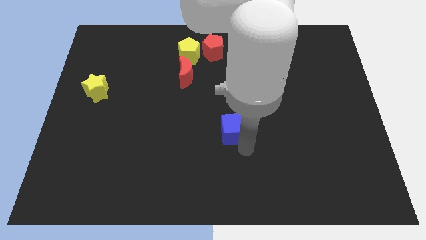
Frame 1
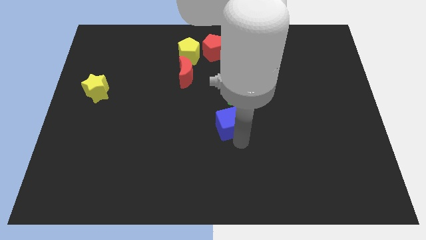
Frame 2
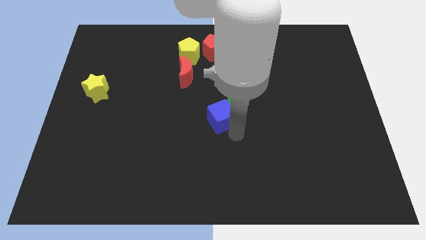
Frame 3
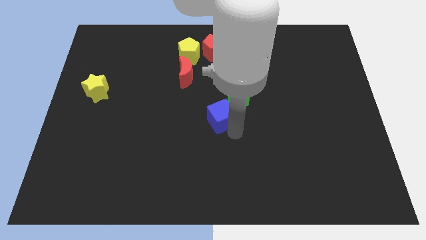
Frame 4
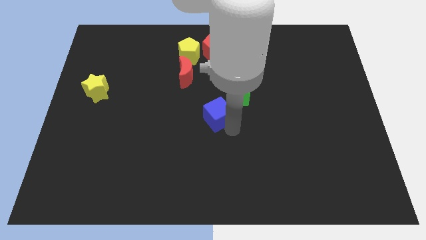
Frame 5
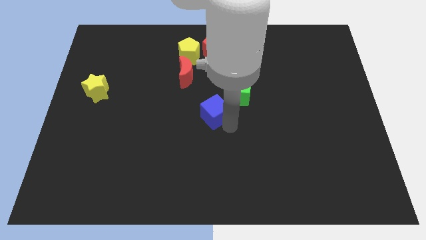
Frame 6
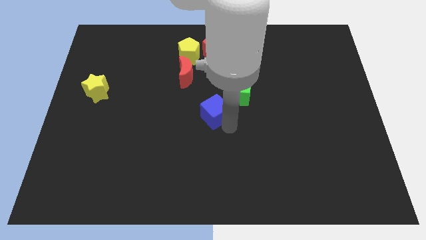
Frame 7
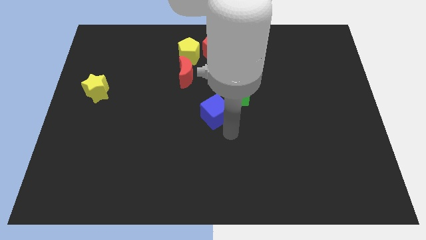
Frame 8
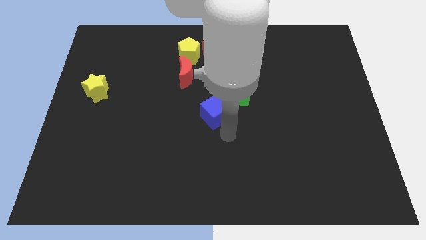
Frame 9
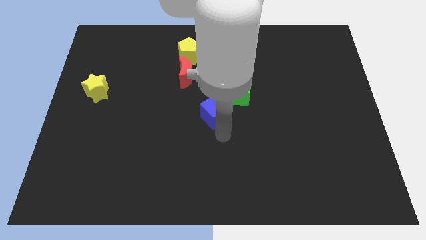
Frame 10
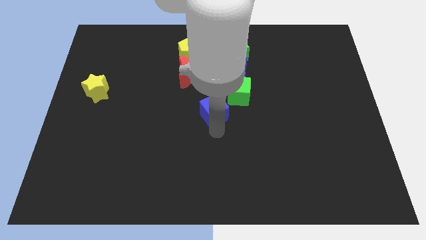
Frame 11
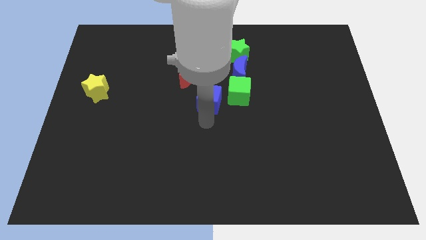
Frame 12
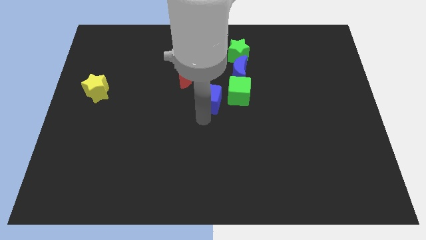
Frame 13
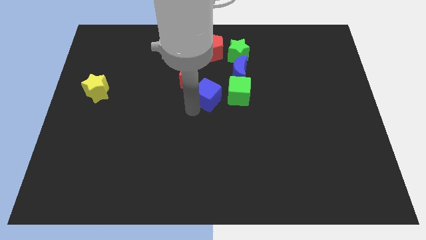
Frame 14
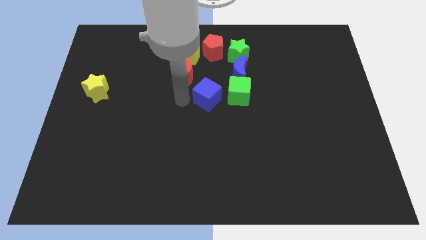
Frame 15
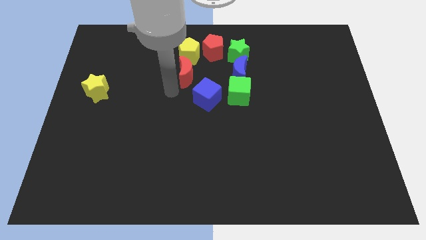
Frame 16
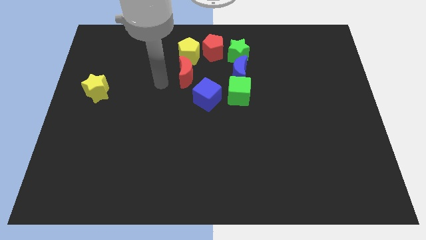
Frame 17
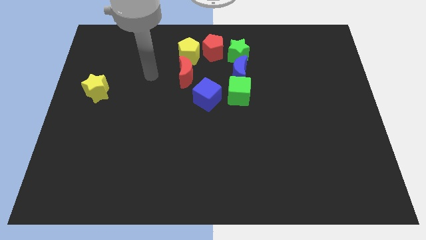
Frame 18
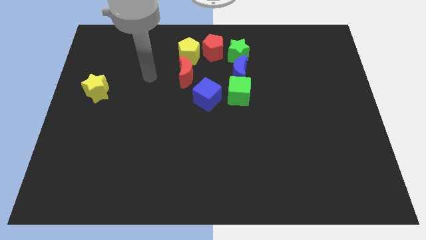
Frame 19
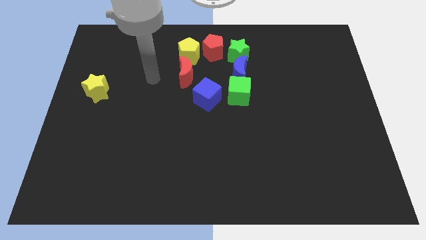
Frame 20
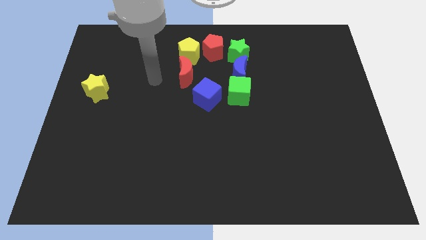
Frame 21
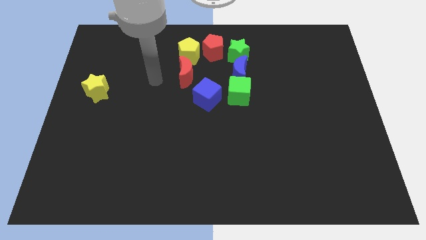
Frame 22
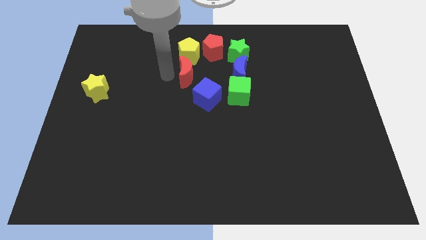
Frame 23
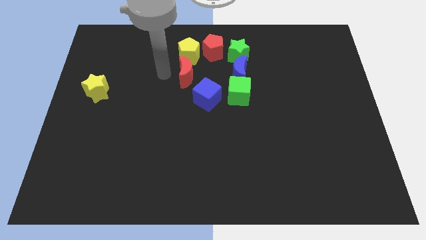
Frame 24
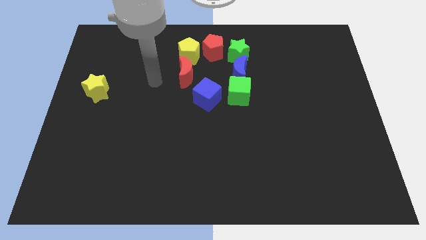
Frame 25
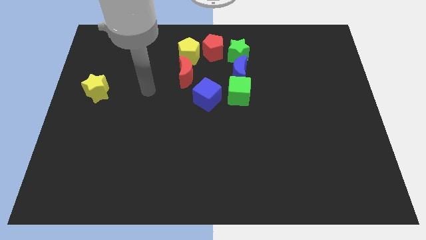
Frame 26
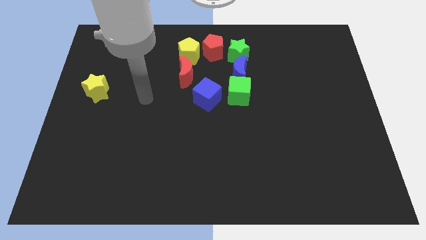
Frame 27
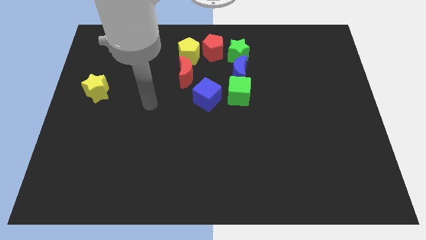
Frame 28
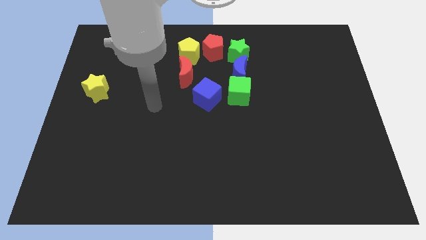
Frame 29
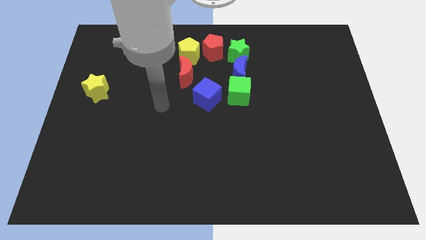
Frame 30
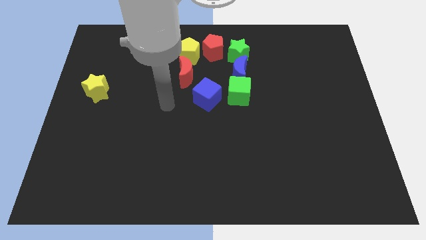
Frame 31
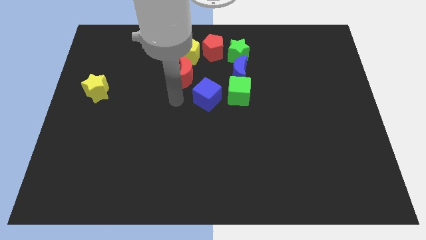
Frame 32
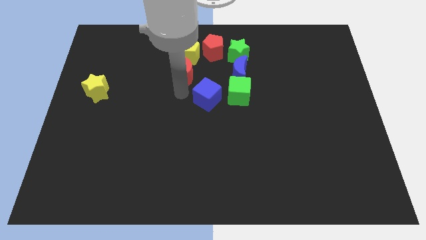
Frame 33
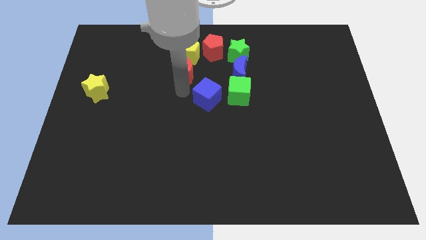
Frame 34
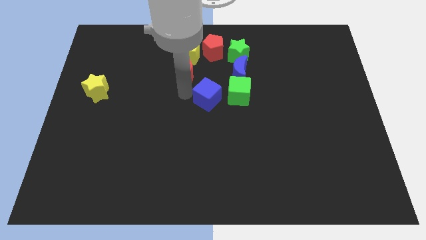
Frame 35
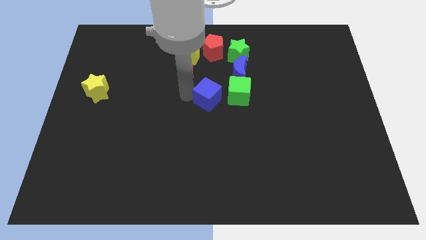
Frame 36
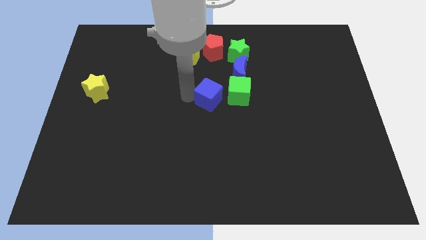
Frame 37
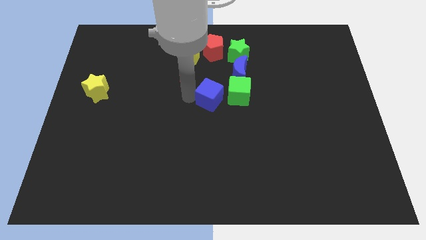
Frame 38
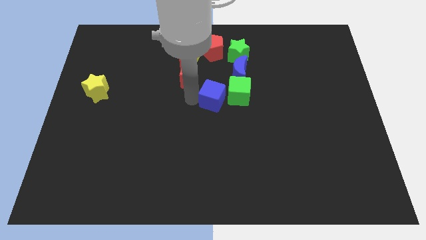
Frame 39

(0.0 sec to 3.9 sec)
place the blue cube towards the left side of the green cube

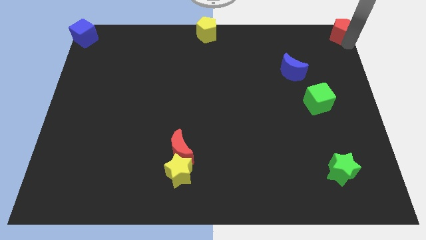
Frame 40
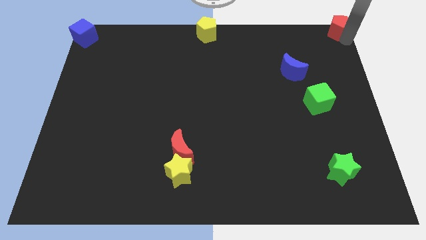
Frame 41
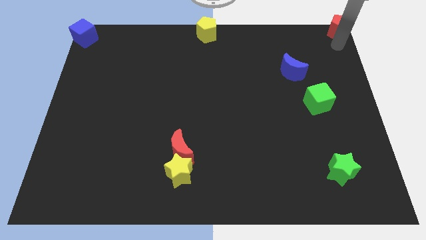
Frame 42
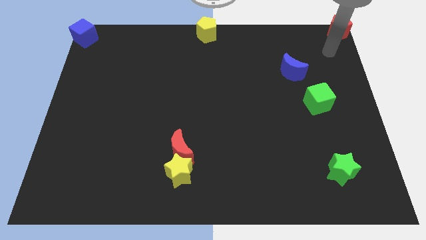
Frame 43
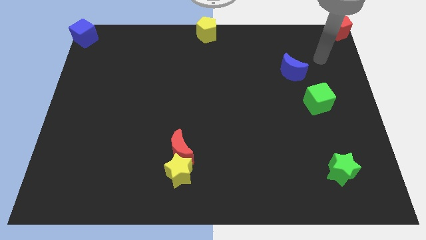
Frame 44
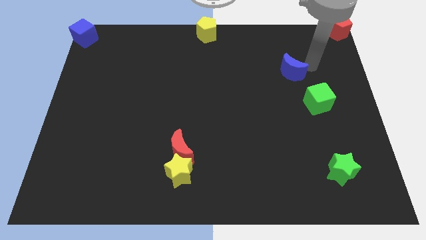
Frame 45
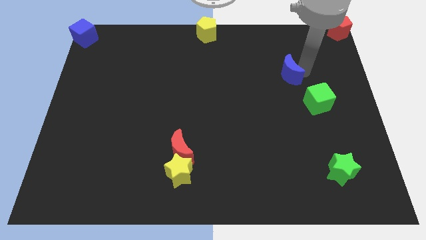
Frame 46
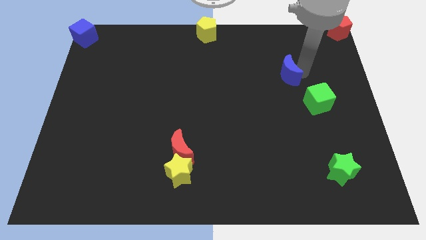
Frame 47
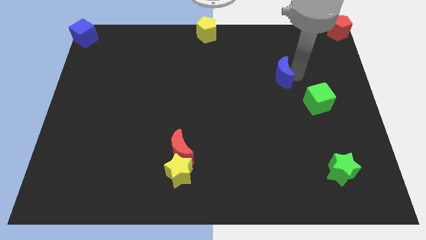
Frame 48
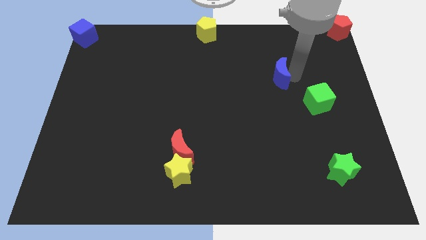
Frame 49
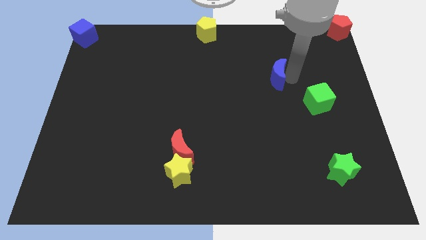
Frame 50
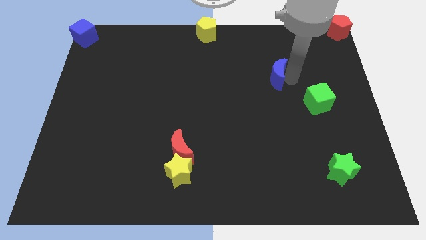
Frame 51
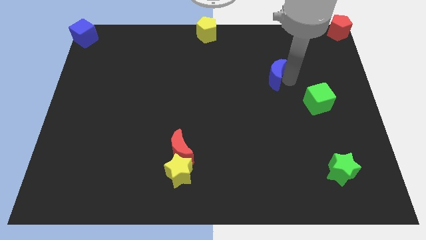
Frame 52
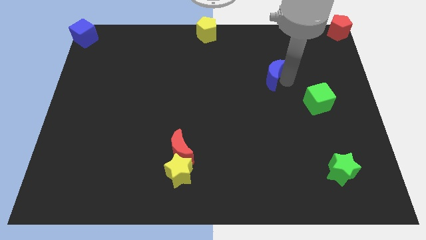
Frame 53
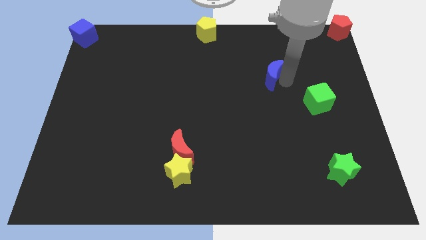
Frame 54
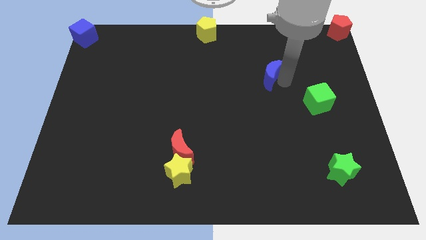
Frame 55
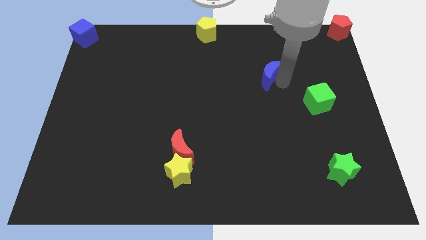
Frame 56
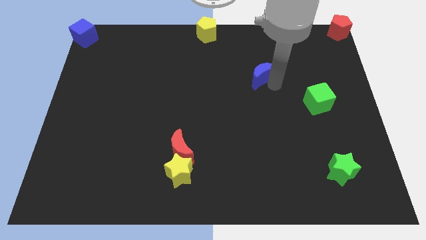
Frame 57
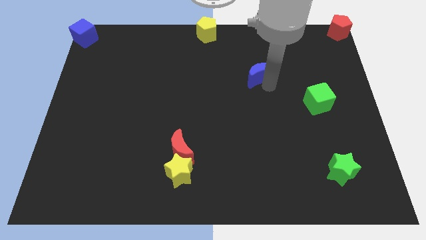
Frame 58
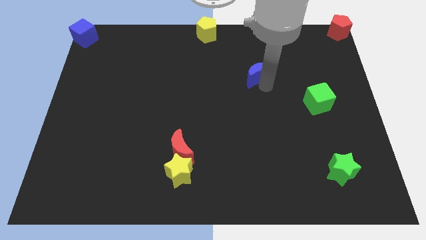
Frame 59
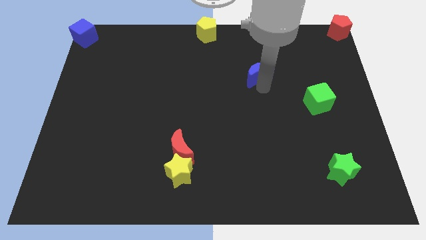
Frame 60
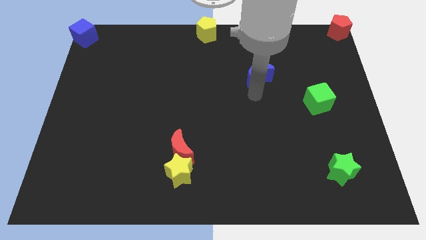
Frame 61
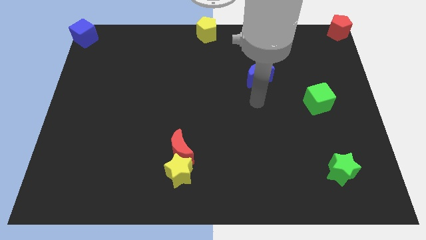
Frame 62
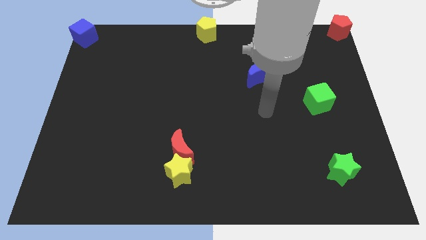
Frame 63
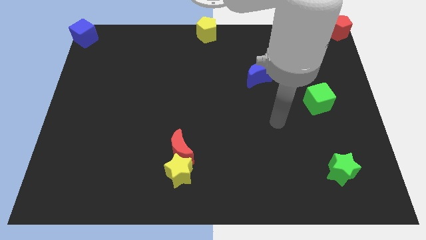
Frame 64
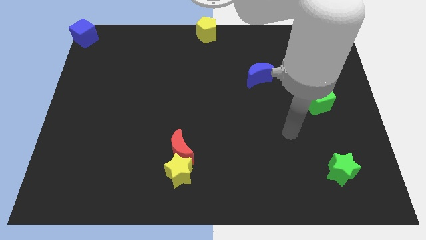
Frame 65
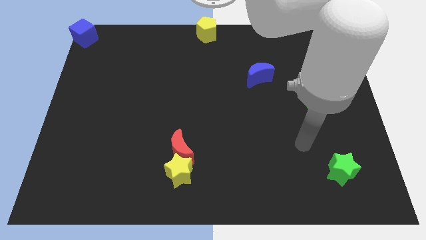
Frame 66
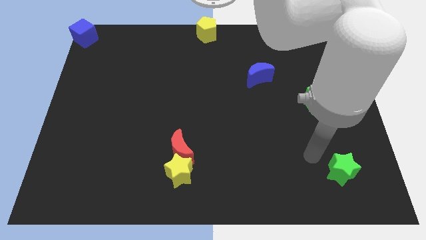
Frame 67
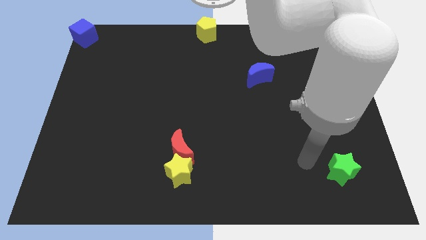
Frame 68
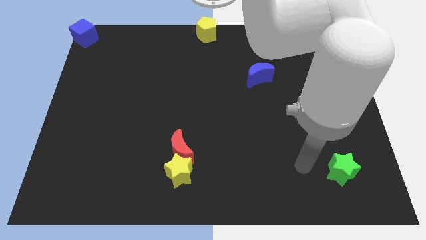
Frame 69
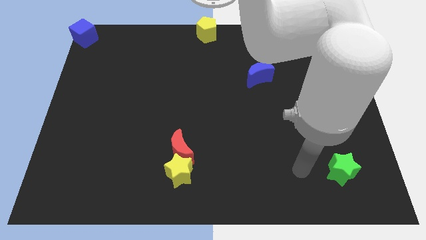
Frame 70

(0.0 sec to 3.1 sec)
place blue moon diagonal to green cube

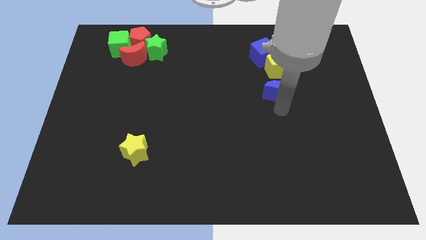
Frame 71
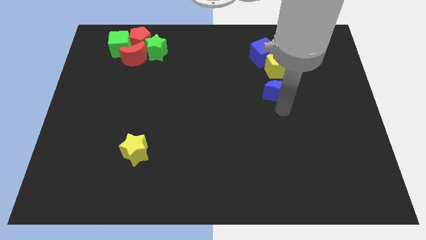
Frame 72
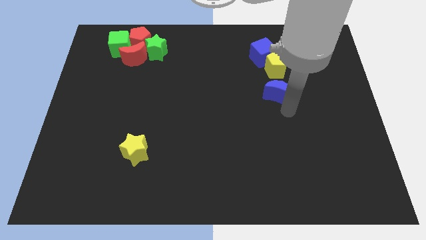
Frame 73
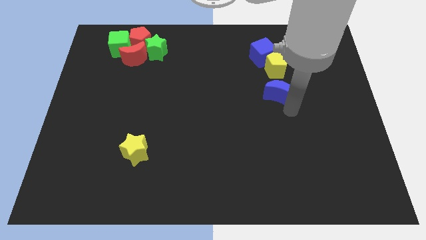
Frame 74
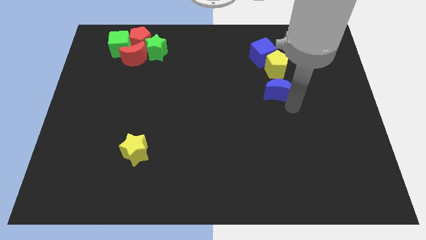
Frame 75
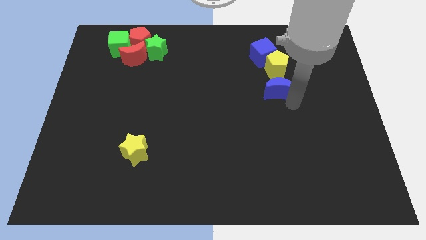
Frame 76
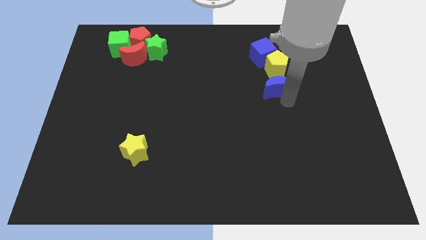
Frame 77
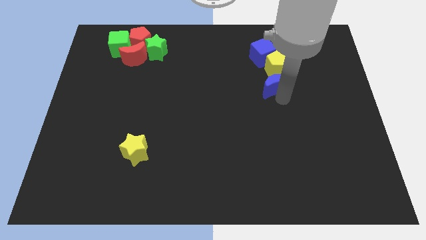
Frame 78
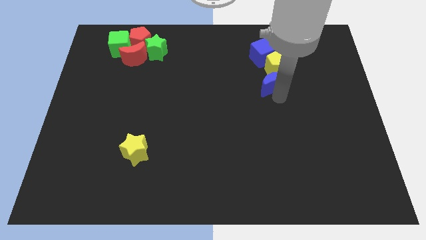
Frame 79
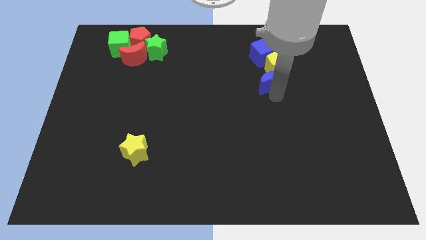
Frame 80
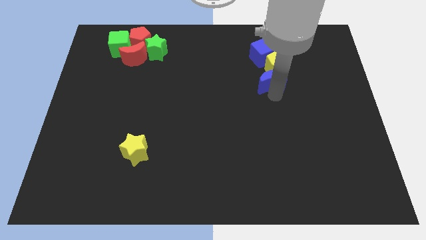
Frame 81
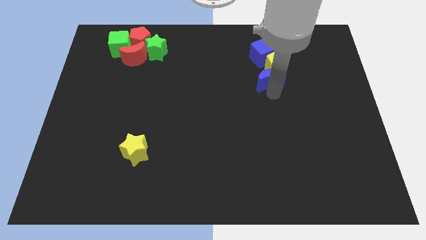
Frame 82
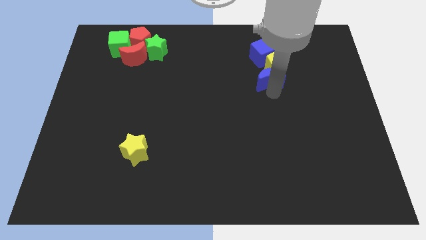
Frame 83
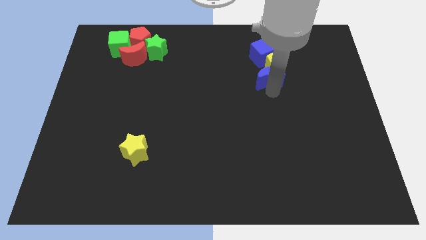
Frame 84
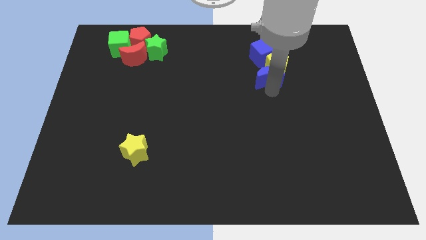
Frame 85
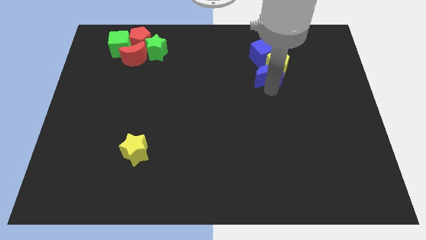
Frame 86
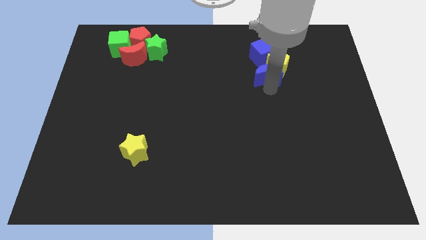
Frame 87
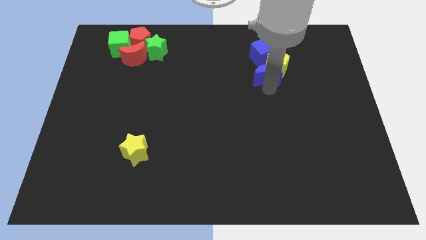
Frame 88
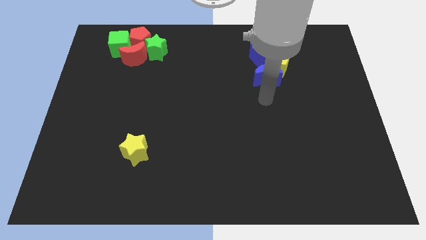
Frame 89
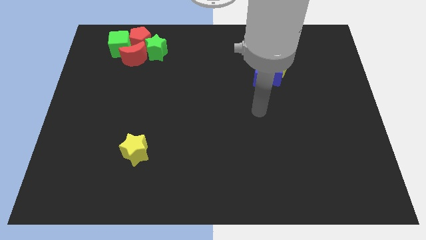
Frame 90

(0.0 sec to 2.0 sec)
push the blue crescent into the yellow pentagon
